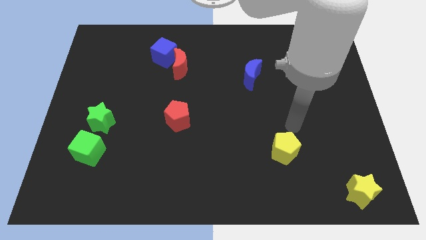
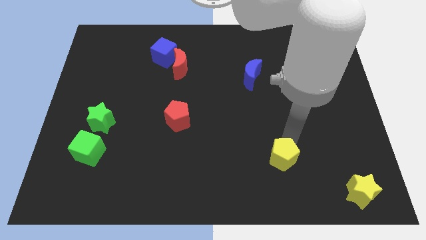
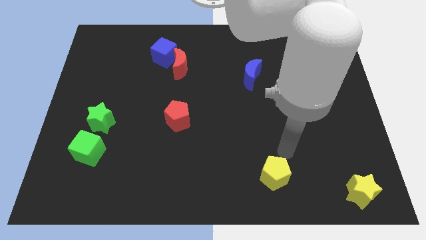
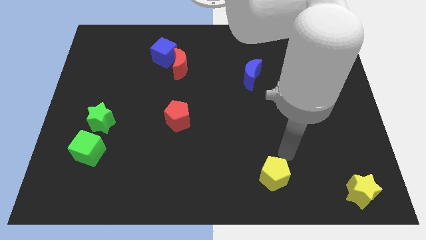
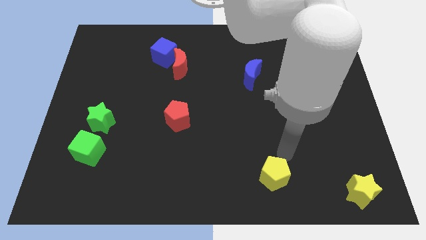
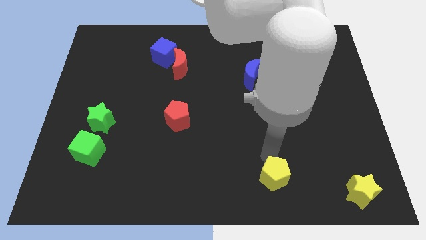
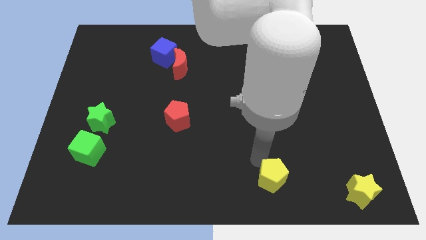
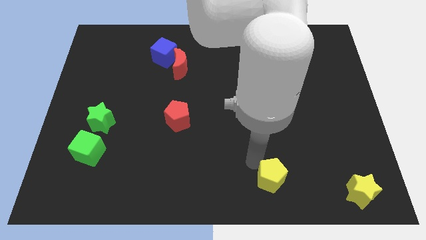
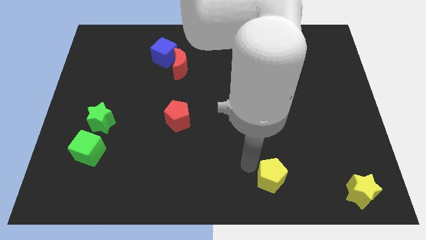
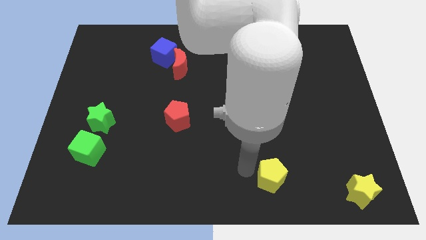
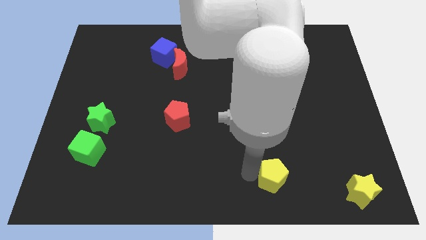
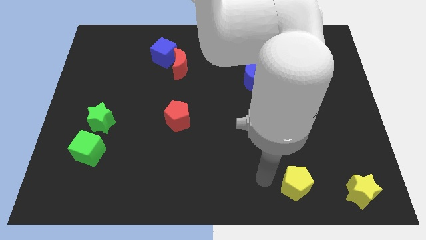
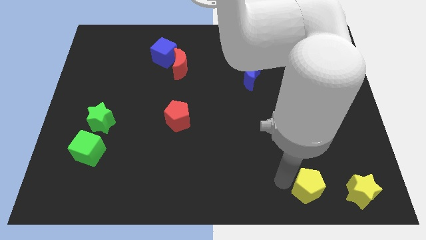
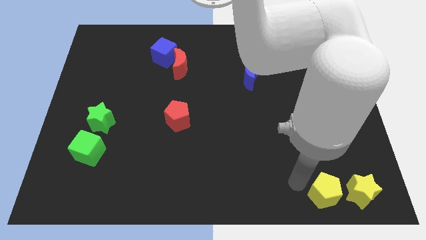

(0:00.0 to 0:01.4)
move the yellow pentagon to the left of the yellow star

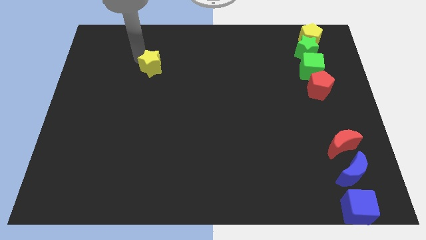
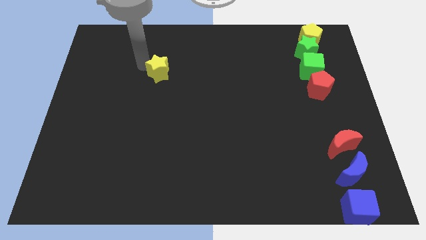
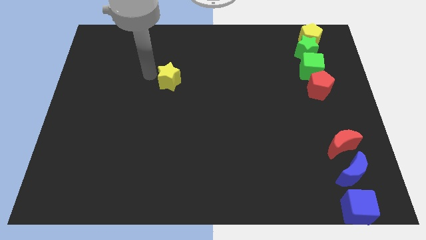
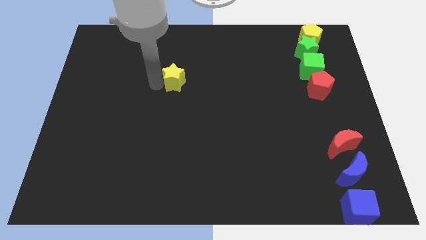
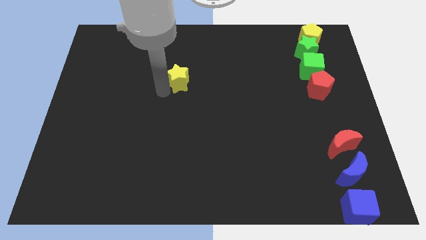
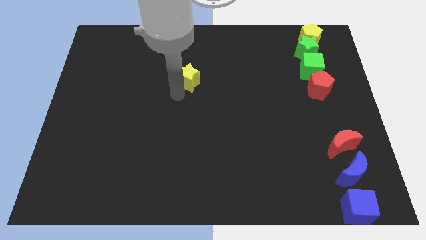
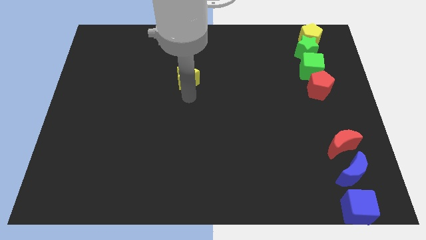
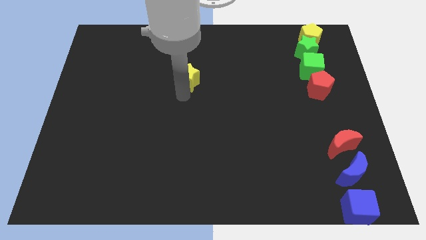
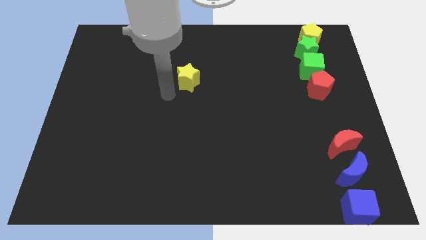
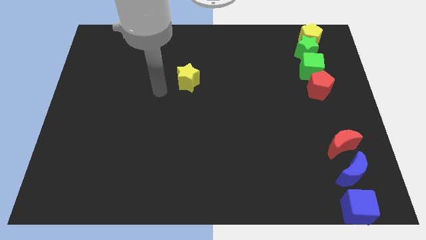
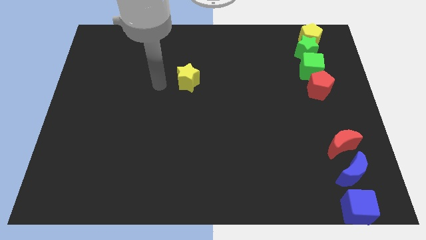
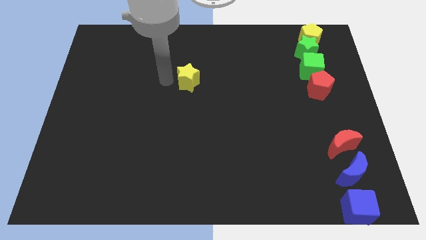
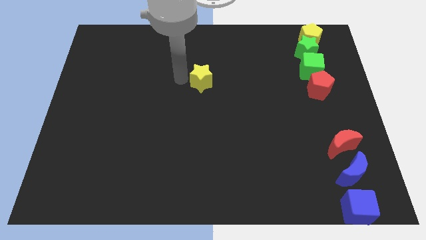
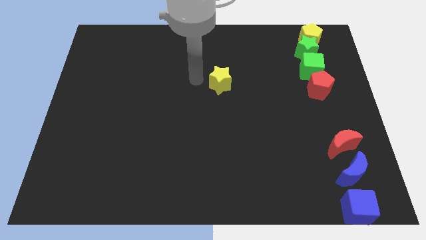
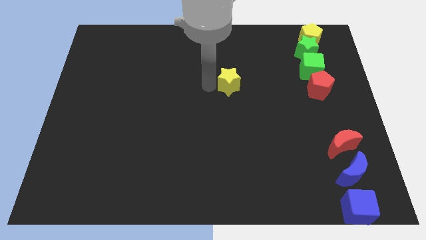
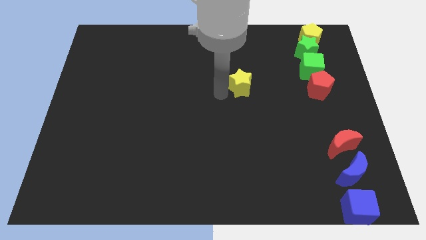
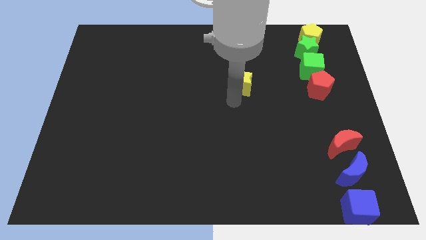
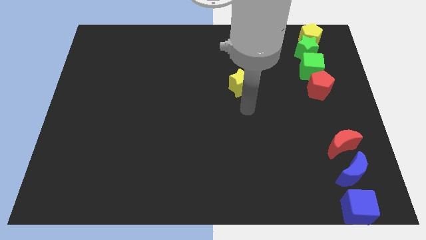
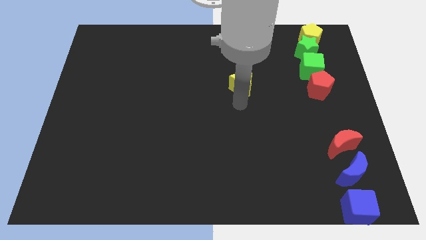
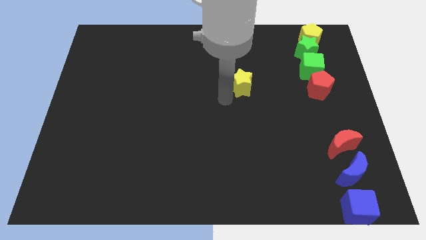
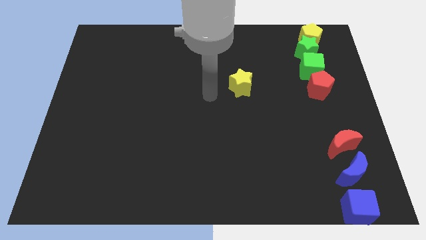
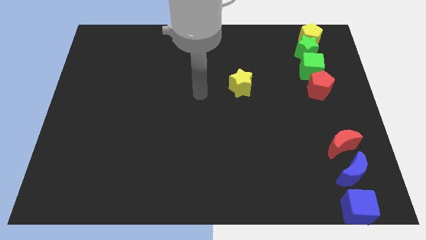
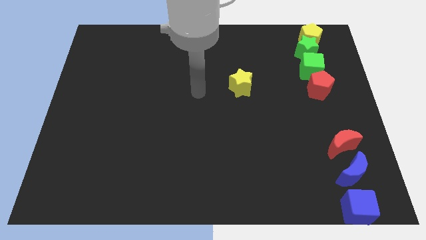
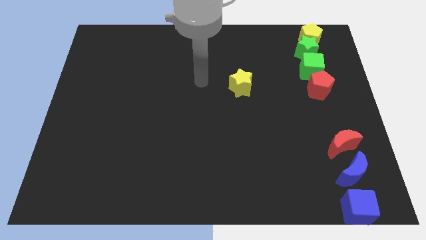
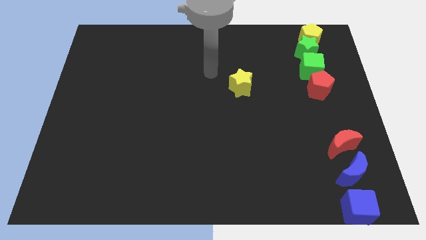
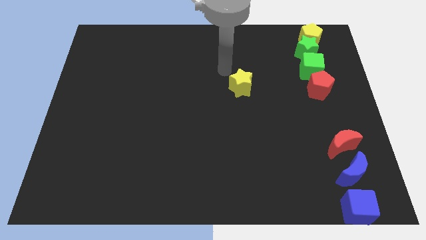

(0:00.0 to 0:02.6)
place yellow star parallel to the red pentagon

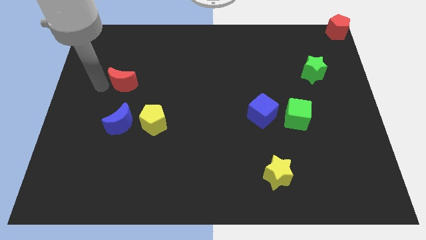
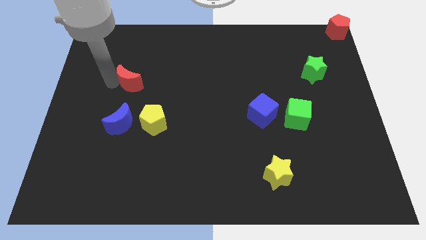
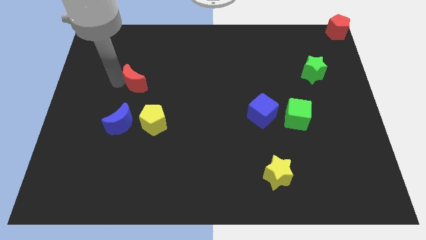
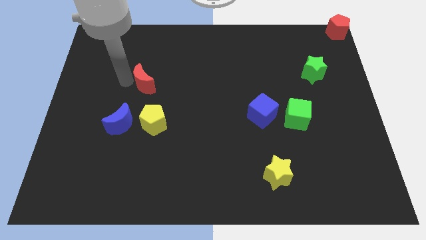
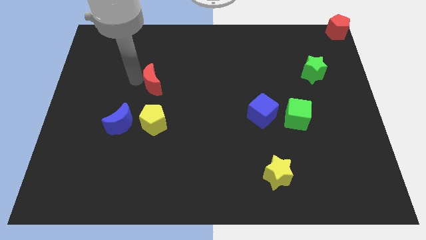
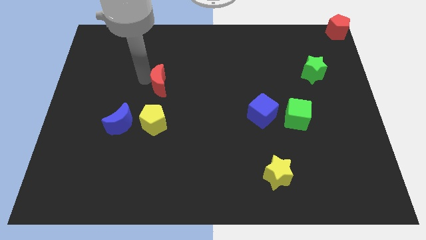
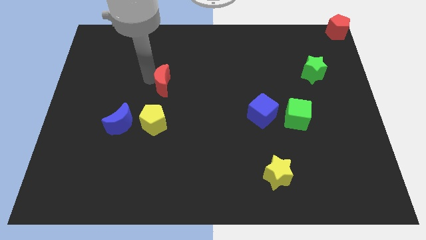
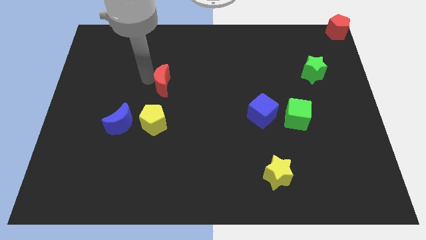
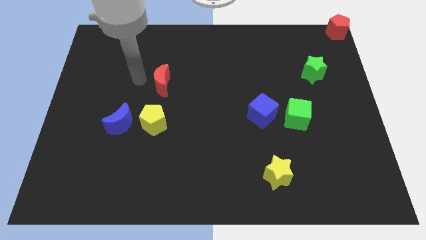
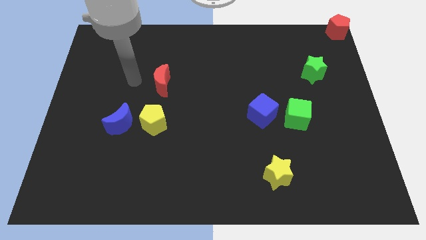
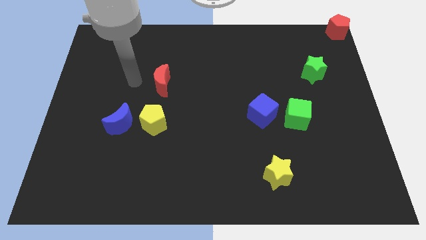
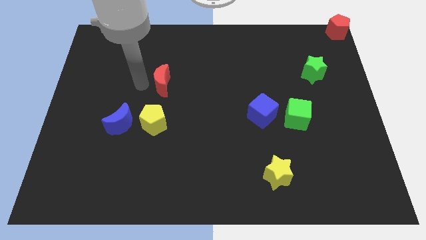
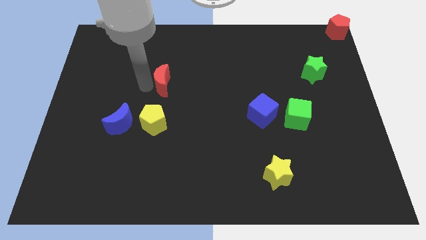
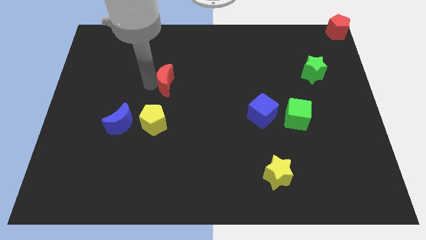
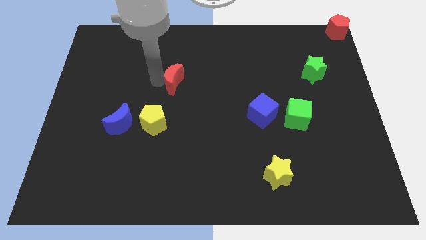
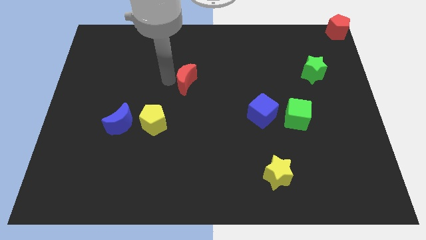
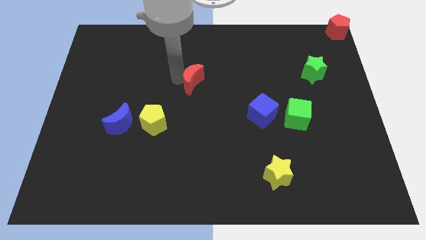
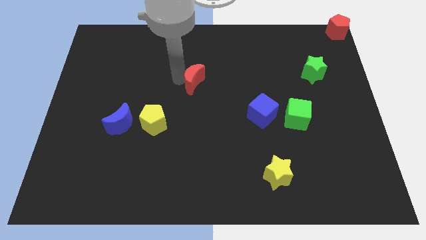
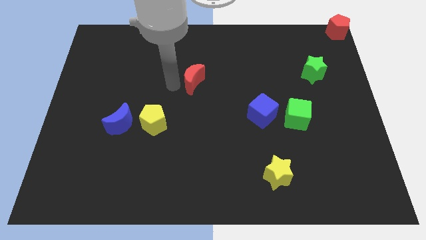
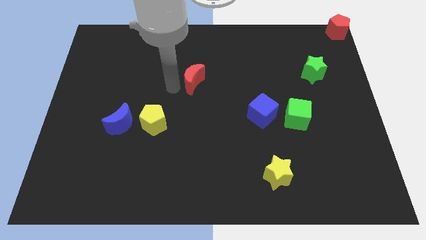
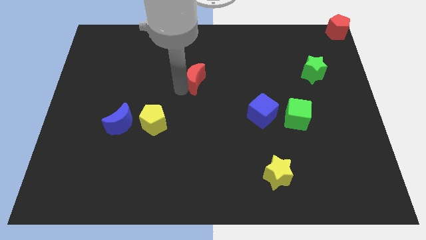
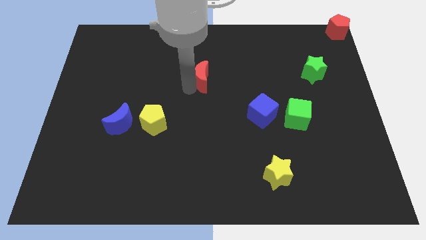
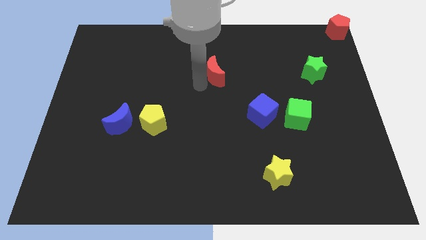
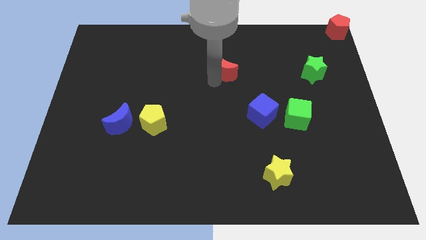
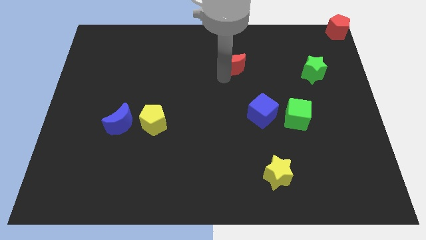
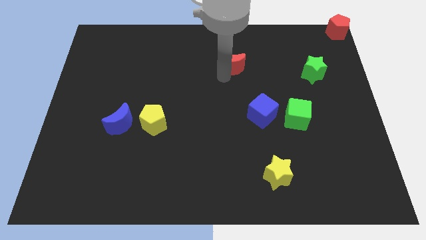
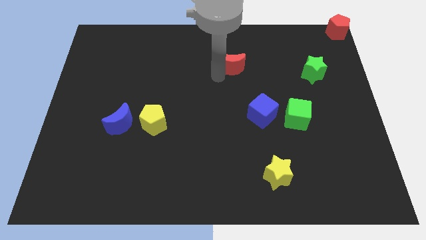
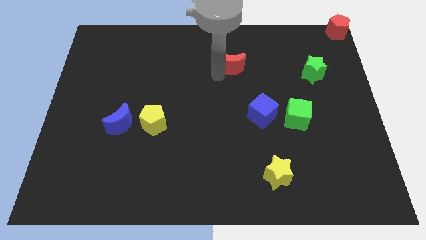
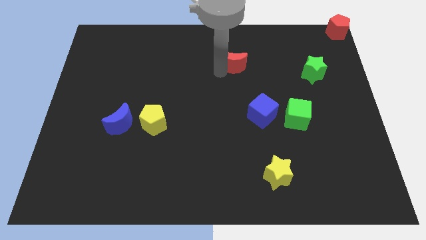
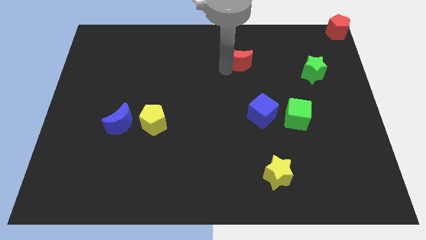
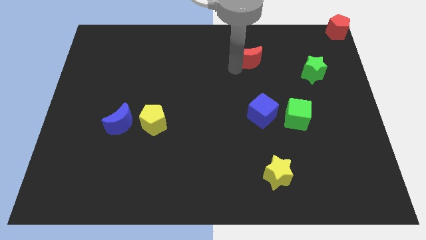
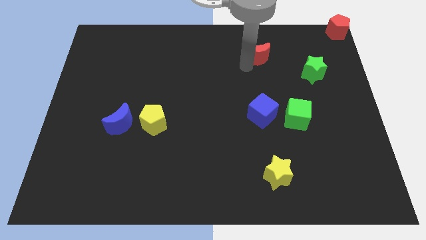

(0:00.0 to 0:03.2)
place red moon vertically above blue cube

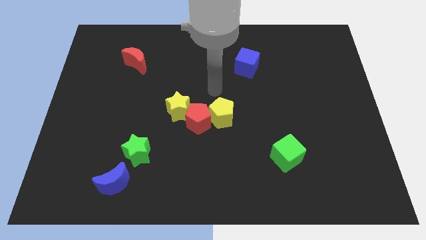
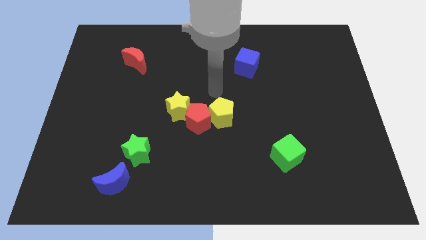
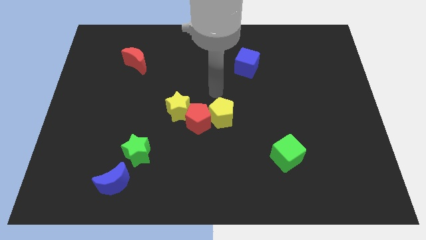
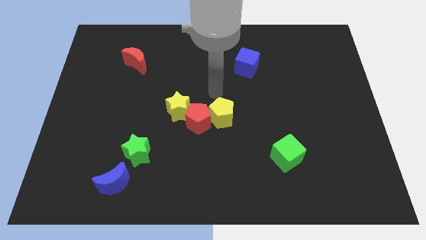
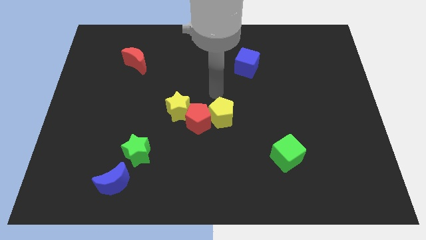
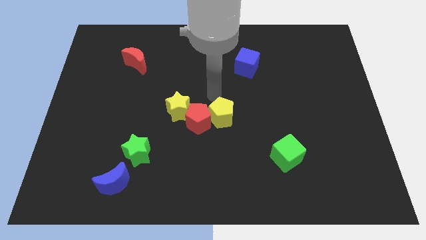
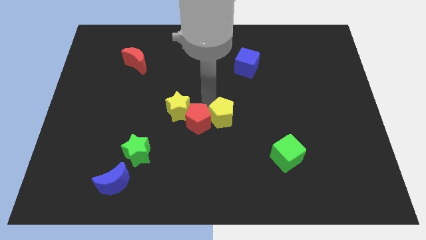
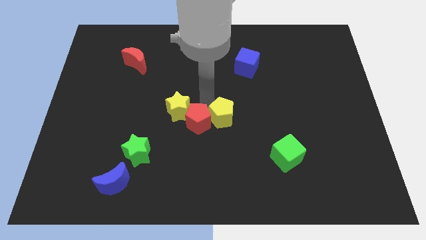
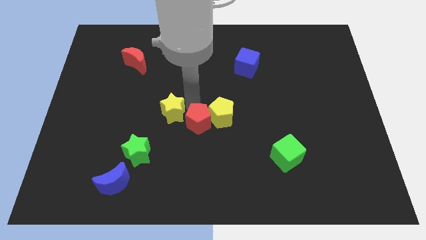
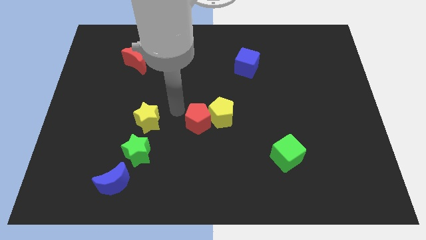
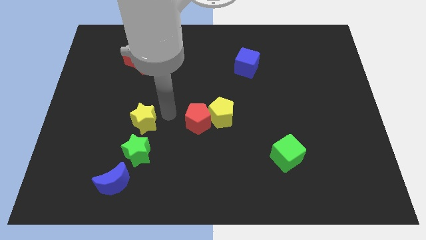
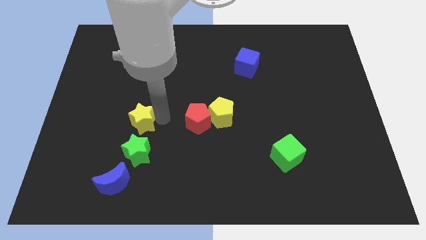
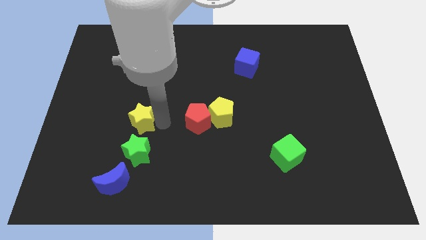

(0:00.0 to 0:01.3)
push the yellow star down to the green star

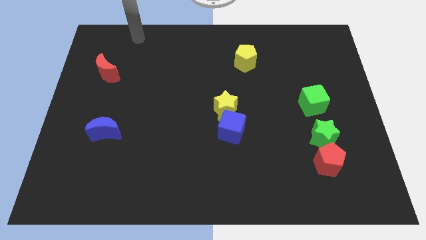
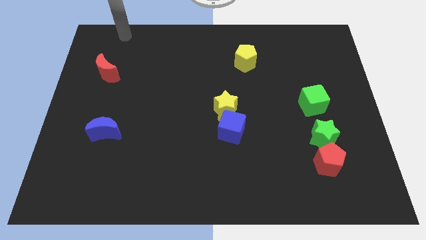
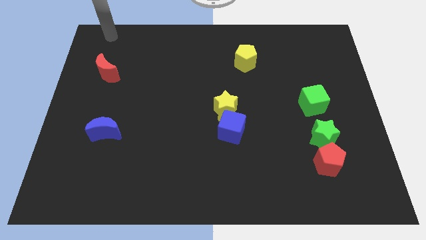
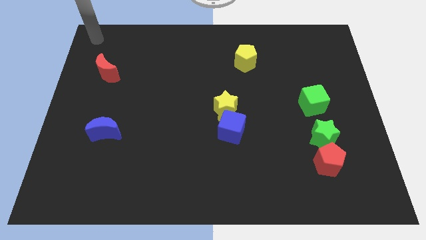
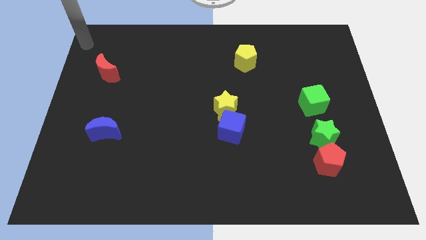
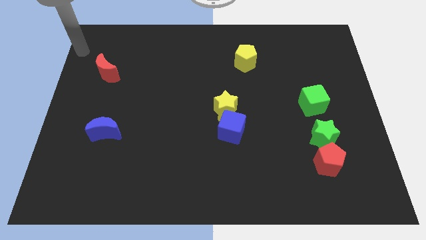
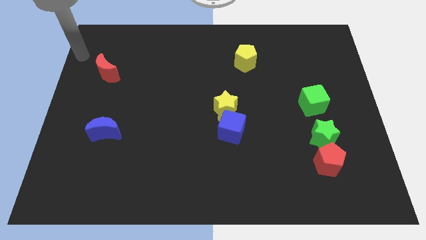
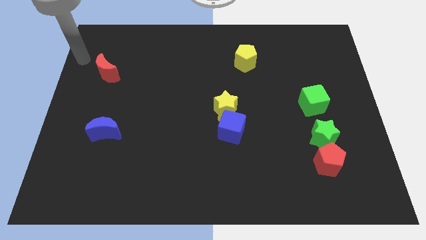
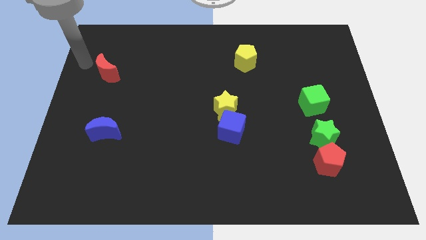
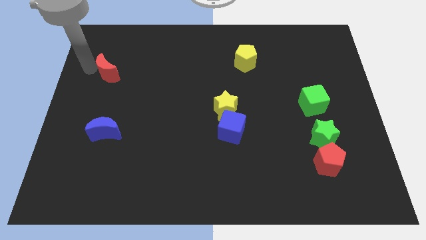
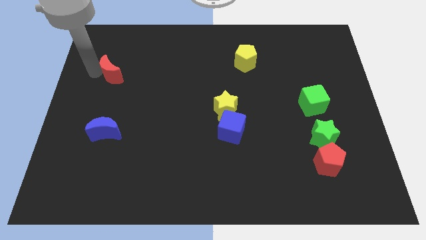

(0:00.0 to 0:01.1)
tap the red crescent
